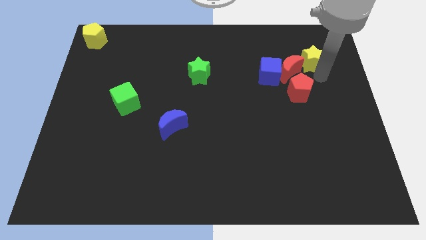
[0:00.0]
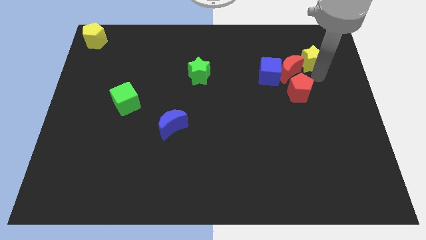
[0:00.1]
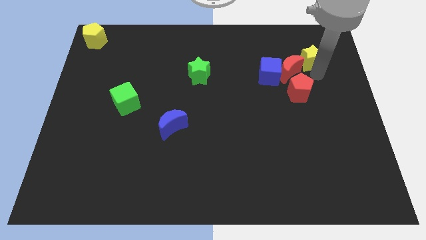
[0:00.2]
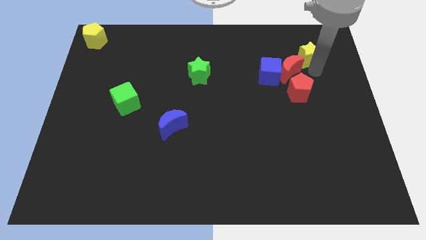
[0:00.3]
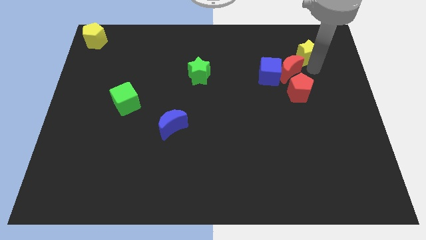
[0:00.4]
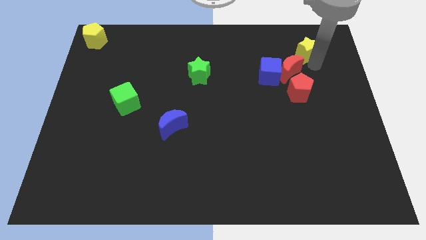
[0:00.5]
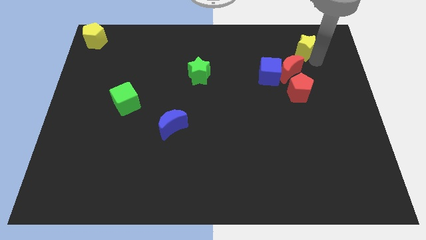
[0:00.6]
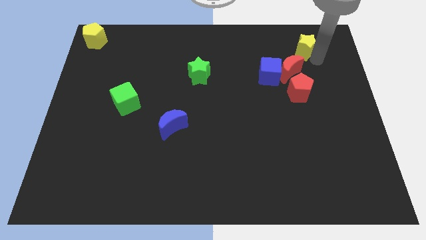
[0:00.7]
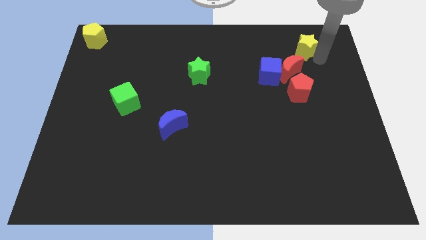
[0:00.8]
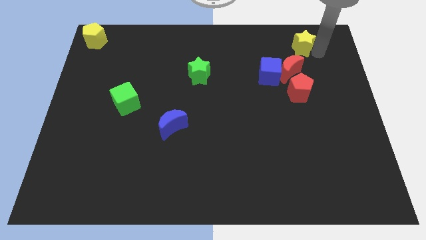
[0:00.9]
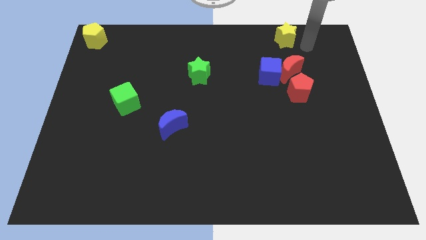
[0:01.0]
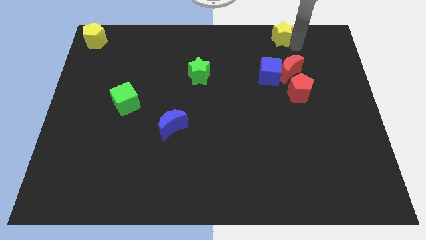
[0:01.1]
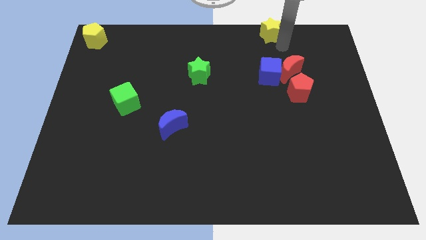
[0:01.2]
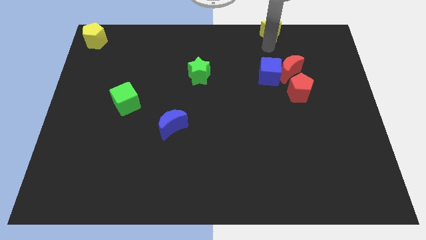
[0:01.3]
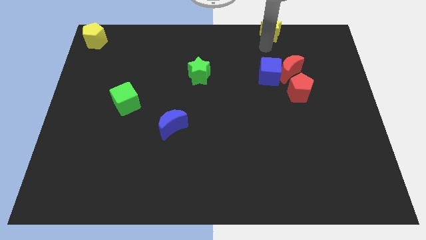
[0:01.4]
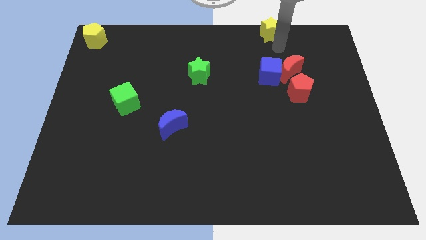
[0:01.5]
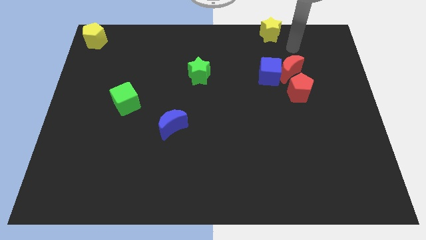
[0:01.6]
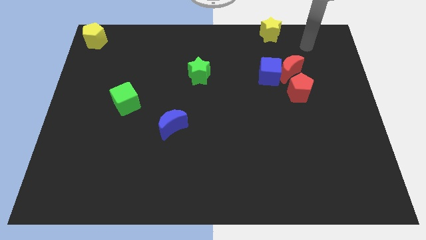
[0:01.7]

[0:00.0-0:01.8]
move the yellow star to the top of the blue cube

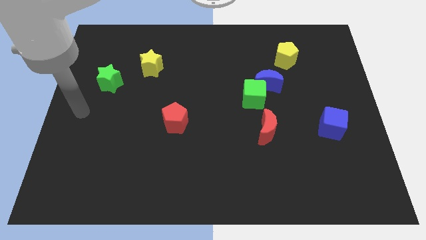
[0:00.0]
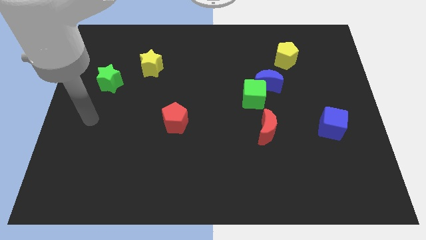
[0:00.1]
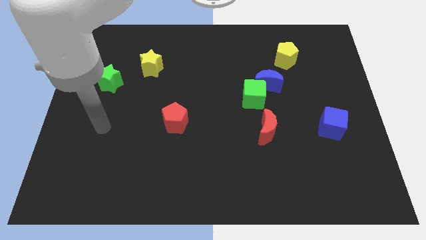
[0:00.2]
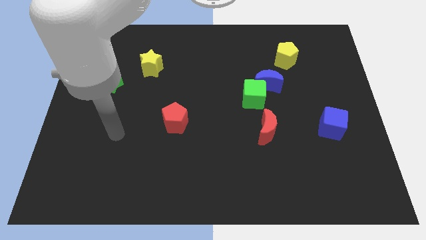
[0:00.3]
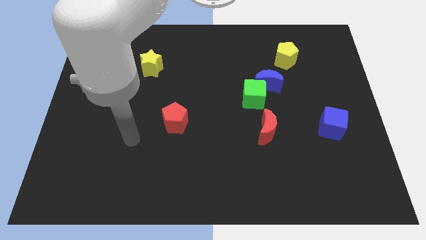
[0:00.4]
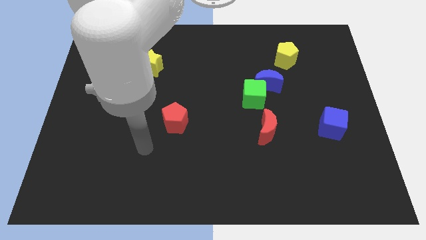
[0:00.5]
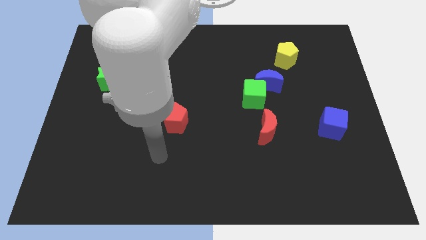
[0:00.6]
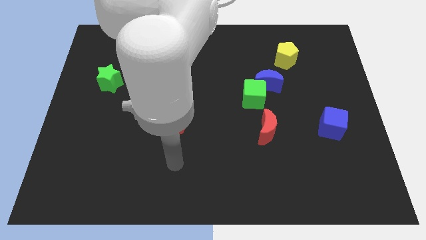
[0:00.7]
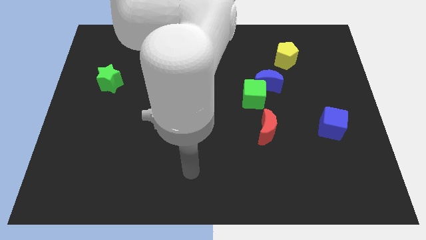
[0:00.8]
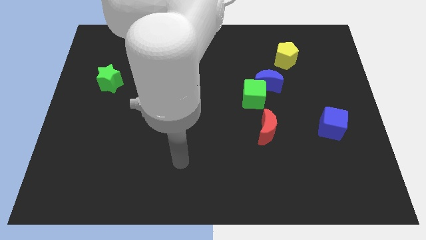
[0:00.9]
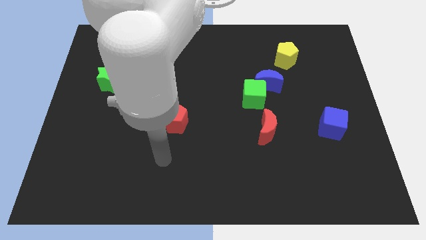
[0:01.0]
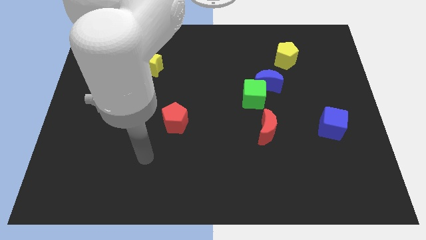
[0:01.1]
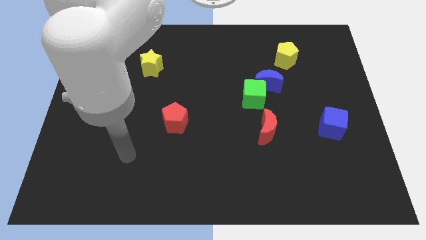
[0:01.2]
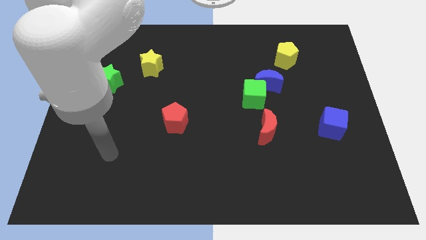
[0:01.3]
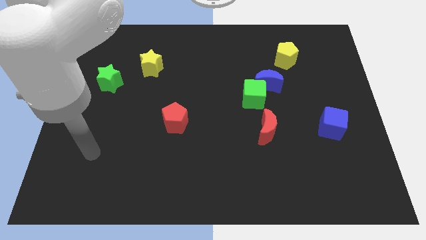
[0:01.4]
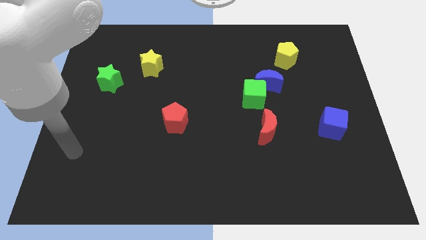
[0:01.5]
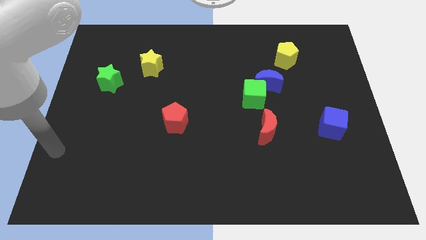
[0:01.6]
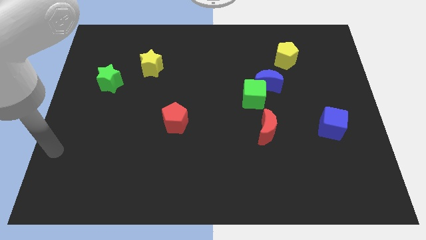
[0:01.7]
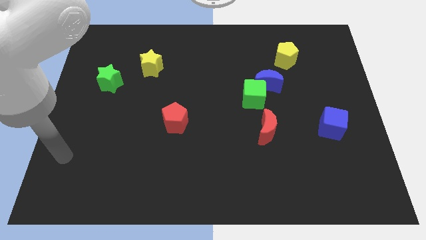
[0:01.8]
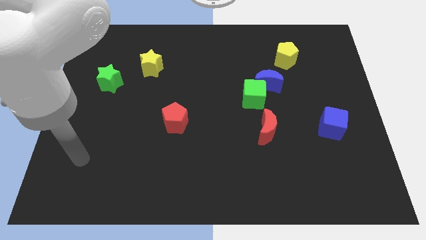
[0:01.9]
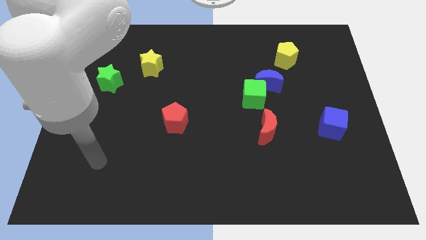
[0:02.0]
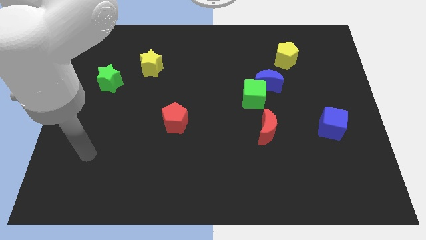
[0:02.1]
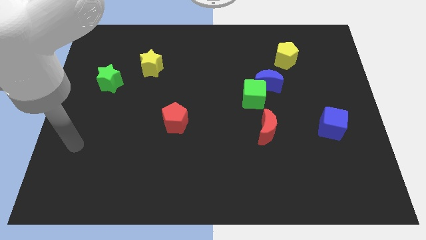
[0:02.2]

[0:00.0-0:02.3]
put arm vertically below green star

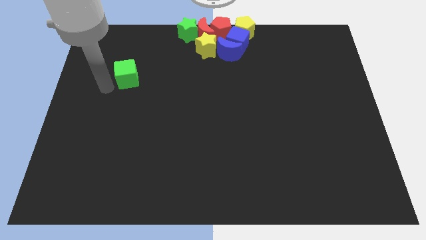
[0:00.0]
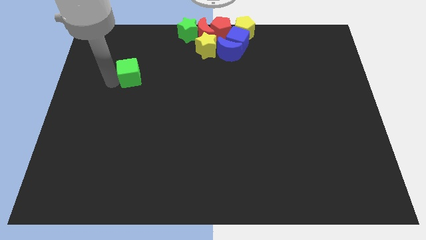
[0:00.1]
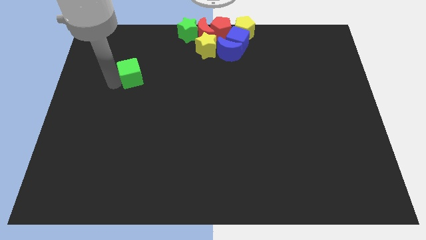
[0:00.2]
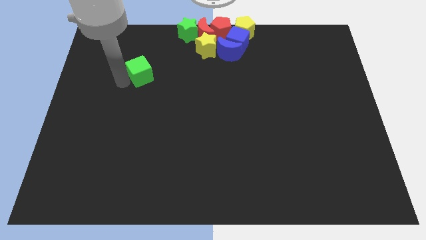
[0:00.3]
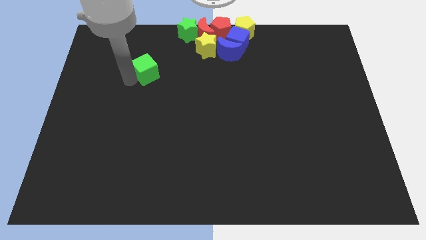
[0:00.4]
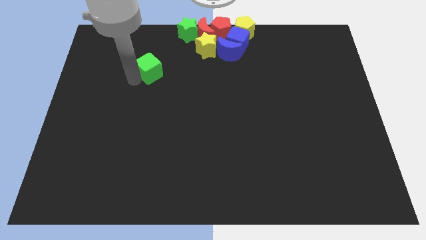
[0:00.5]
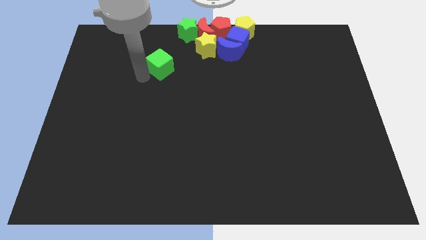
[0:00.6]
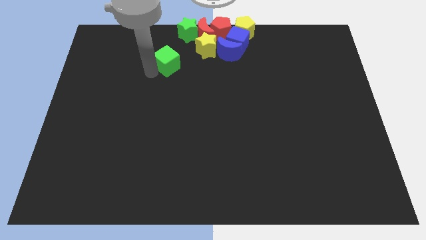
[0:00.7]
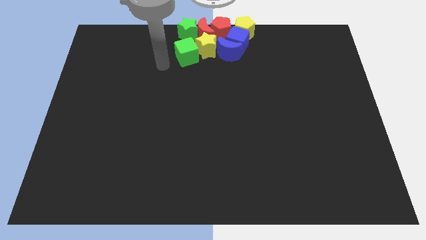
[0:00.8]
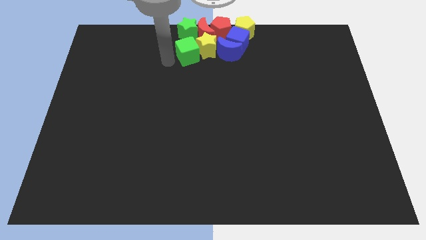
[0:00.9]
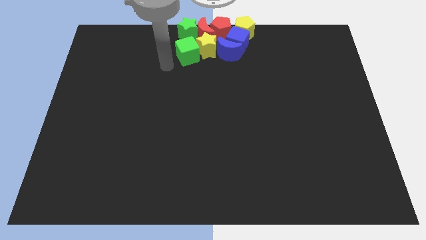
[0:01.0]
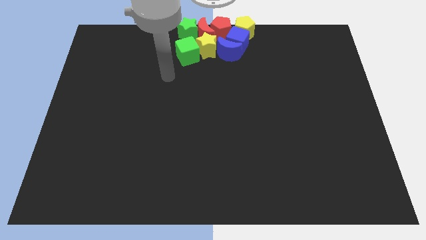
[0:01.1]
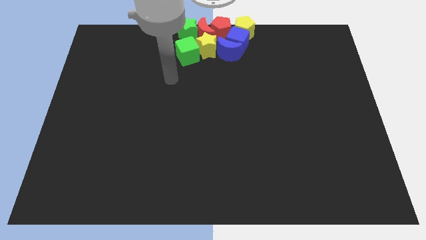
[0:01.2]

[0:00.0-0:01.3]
drag the green cube vertically below the green star

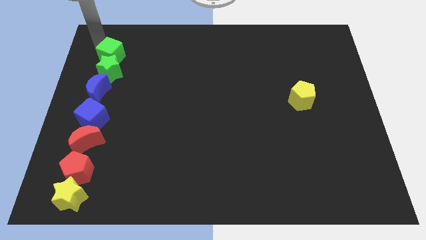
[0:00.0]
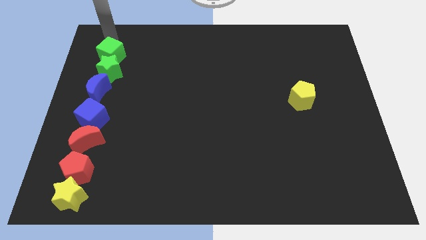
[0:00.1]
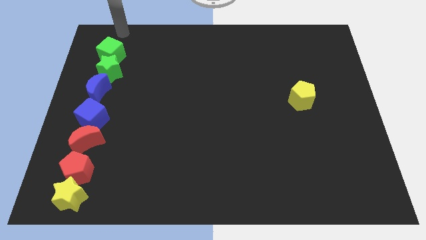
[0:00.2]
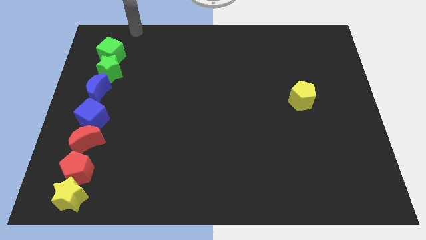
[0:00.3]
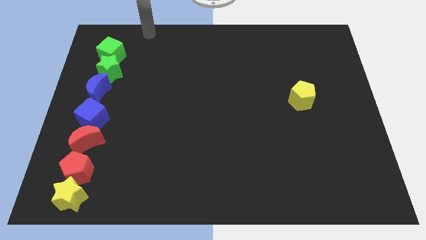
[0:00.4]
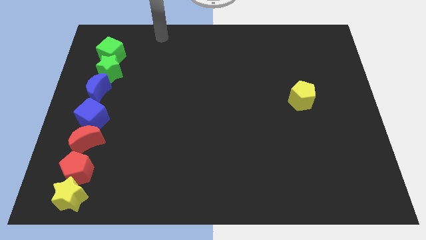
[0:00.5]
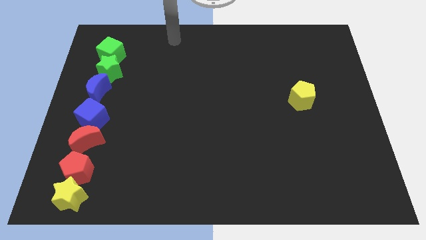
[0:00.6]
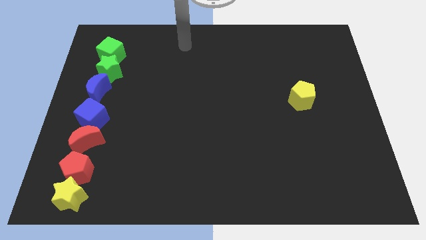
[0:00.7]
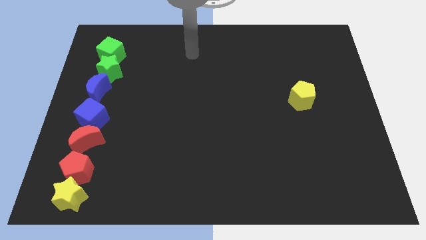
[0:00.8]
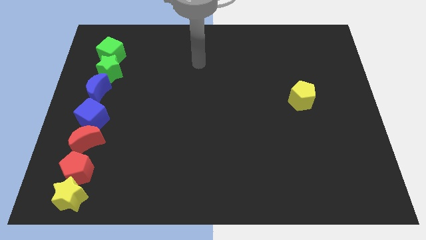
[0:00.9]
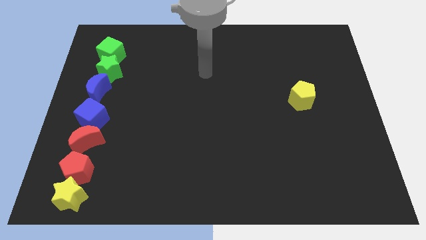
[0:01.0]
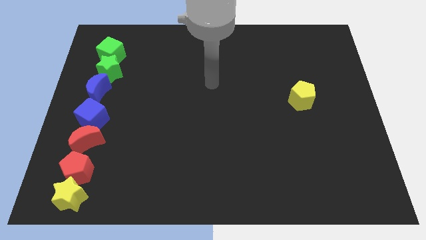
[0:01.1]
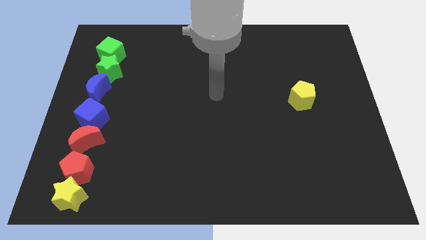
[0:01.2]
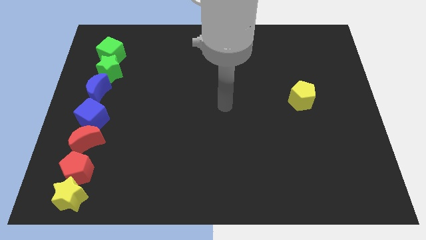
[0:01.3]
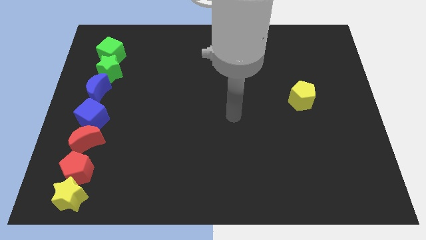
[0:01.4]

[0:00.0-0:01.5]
move your arm at the center of the board

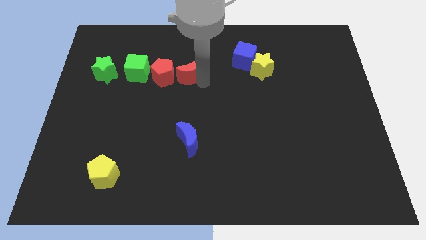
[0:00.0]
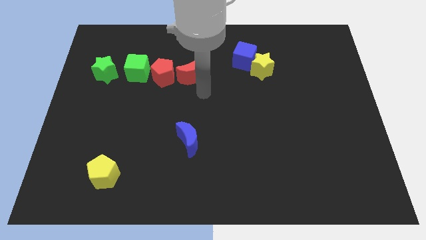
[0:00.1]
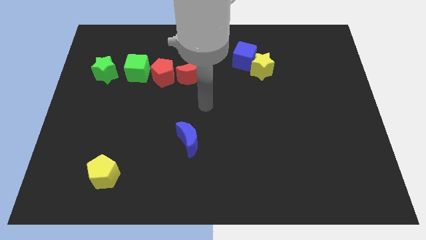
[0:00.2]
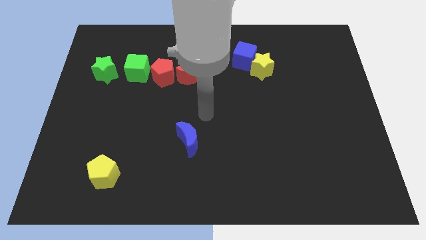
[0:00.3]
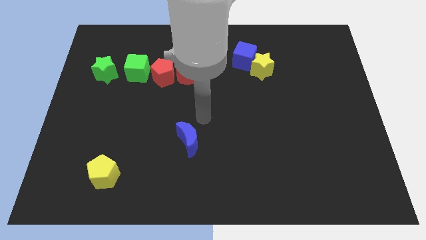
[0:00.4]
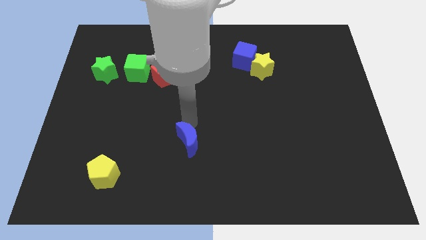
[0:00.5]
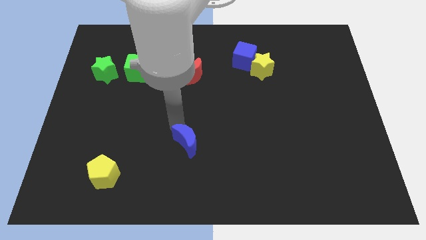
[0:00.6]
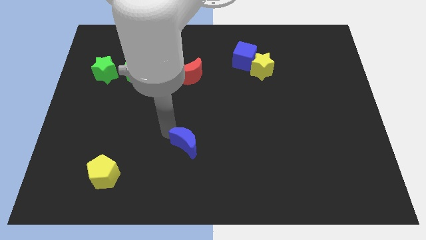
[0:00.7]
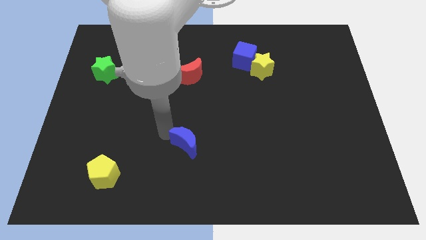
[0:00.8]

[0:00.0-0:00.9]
move your arm away from red moon

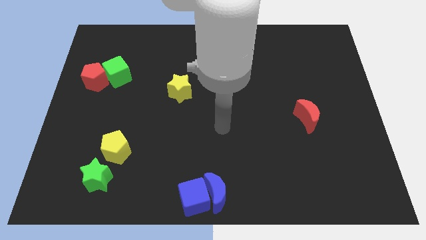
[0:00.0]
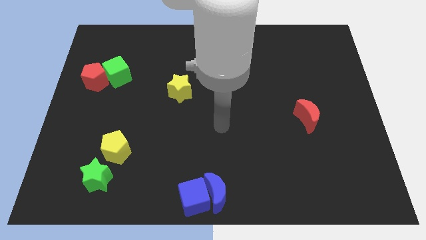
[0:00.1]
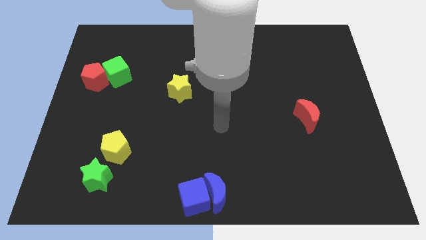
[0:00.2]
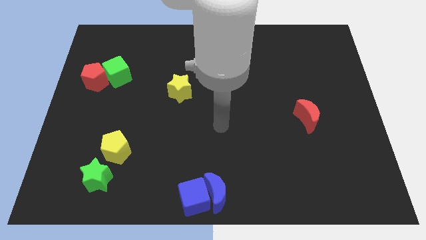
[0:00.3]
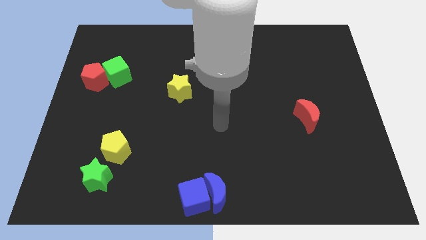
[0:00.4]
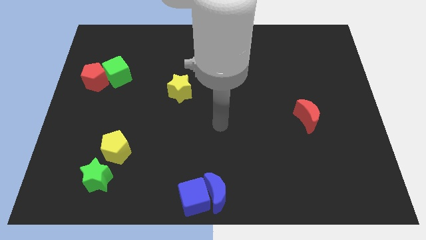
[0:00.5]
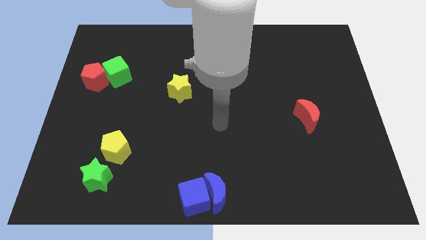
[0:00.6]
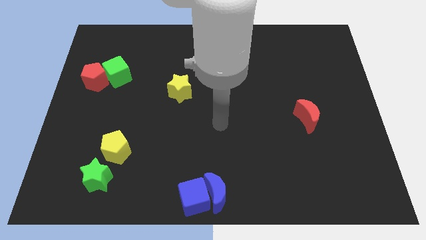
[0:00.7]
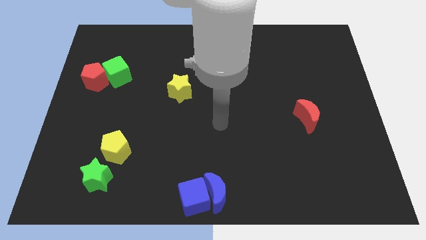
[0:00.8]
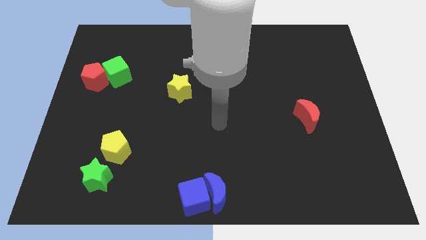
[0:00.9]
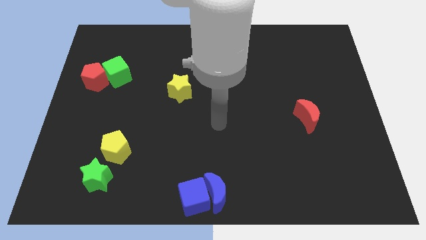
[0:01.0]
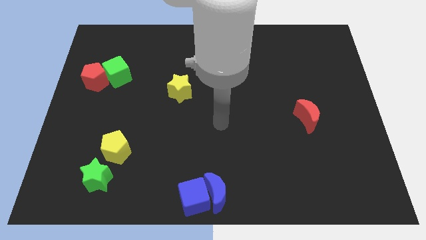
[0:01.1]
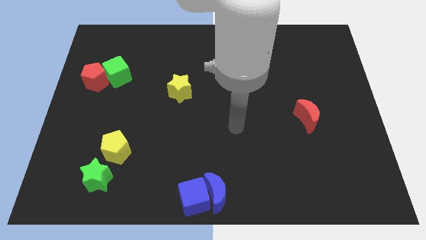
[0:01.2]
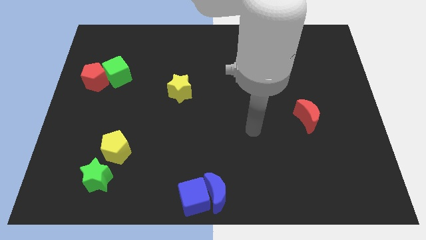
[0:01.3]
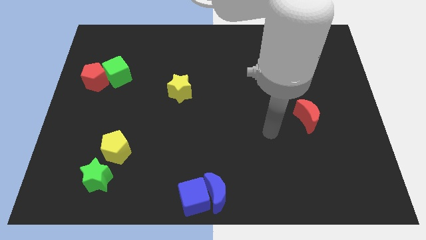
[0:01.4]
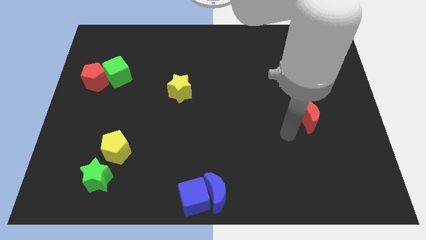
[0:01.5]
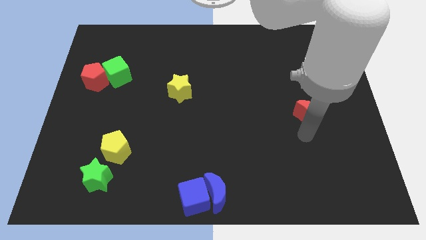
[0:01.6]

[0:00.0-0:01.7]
place your arm below red moon
